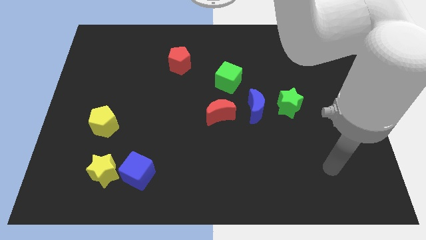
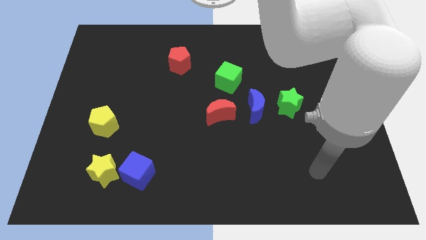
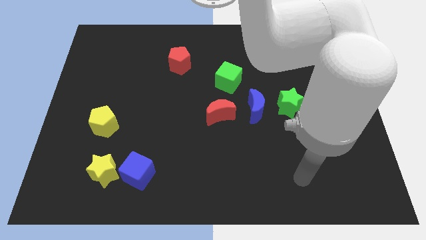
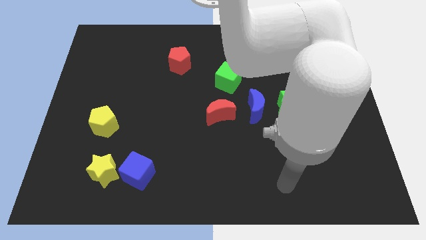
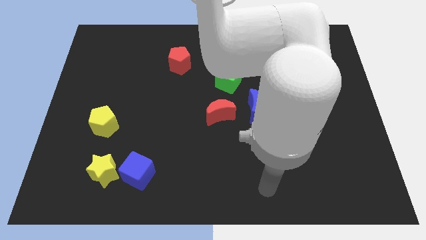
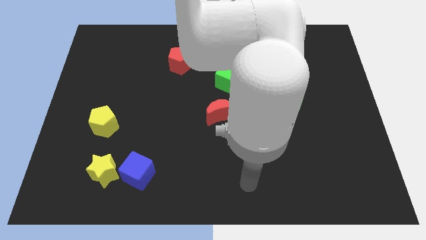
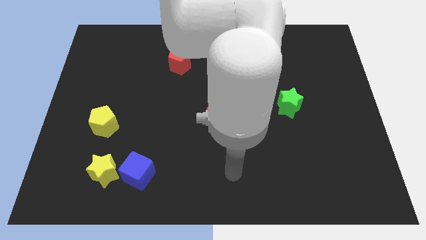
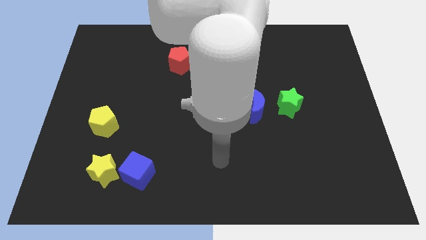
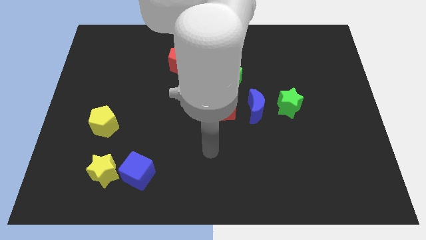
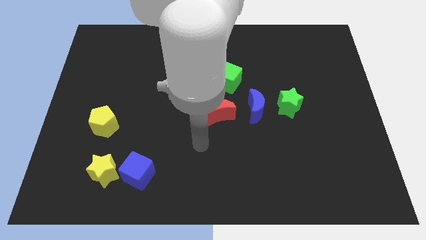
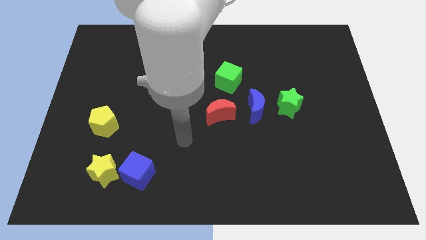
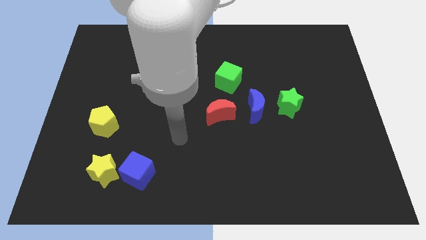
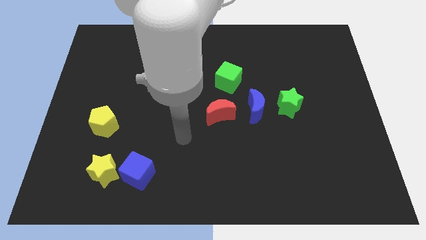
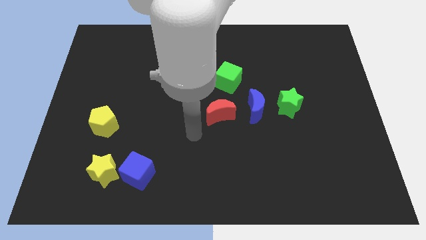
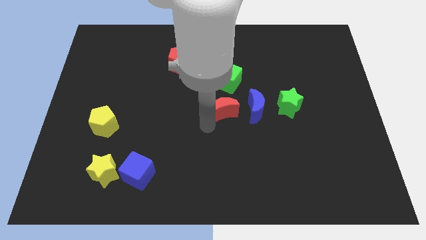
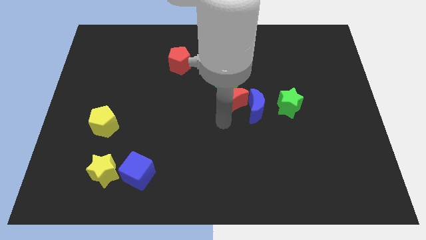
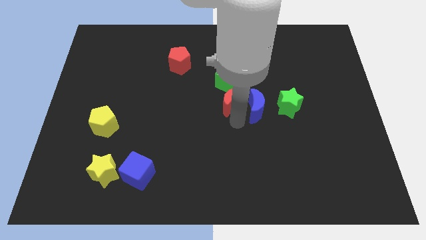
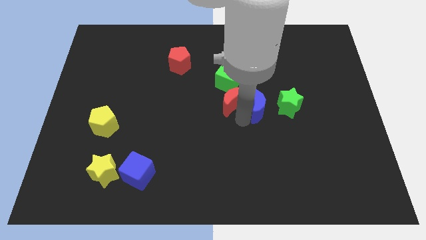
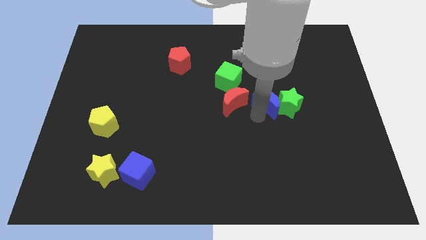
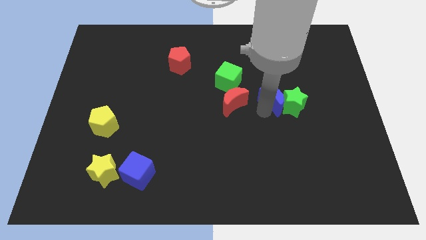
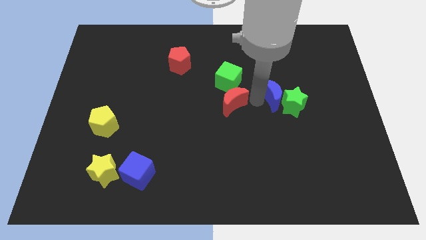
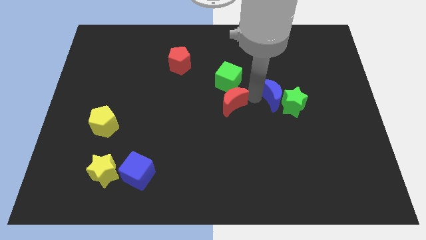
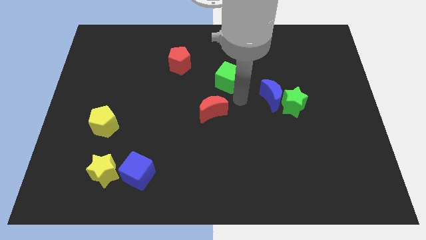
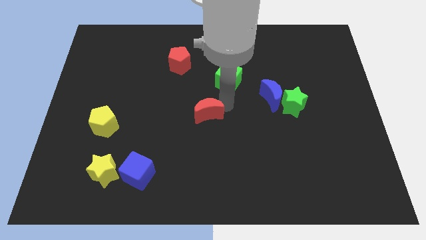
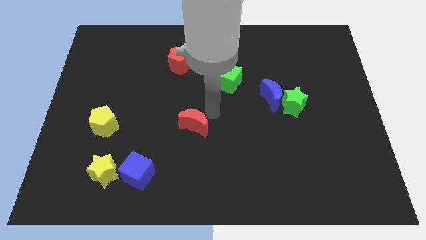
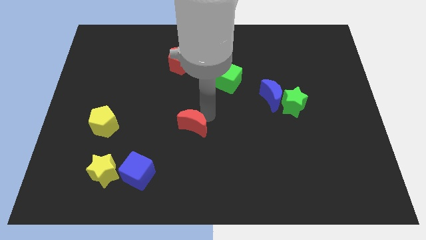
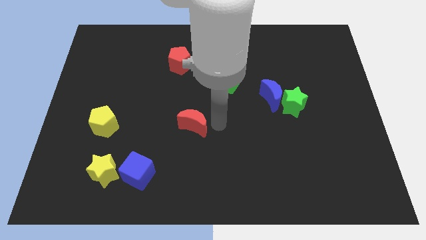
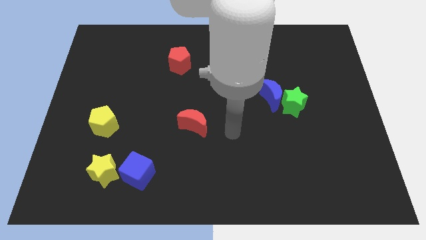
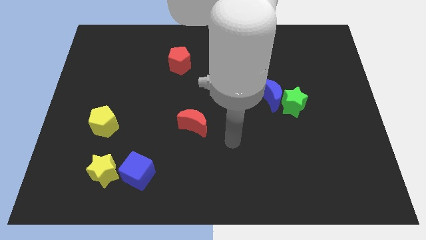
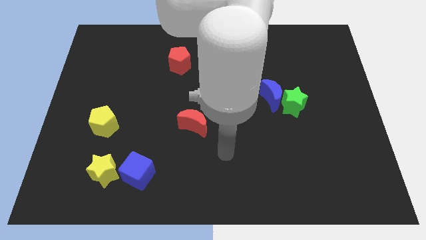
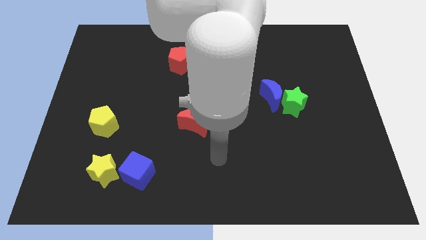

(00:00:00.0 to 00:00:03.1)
move the red moon diagonally to the blue cube

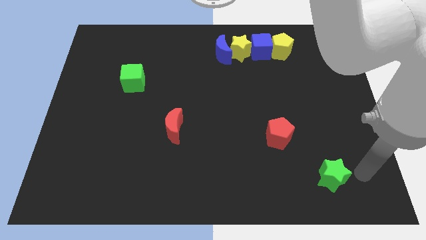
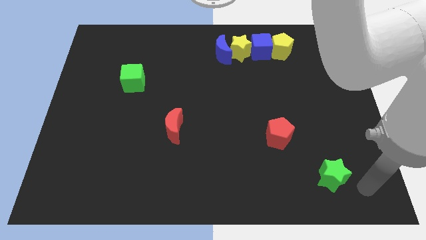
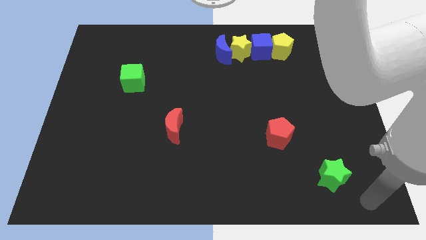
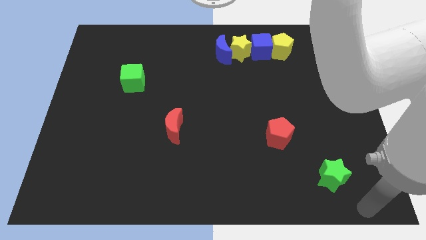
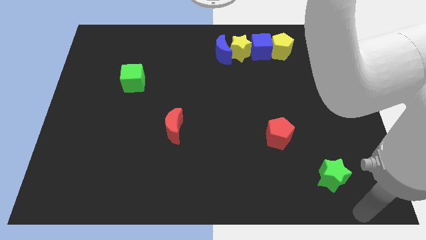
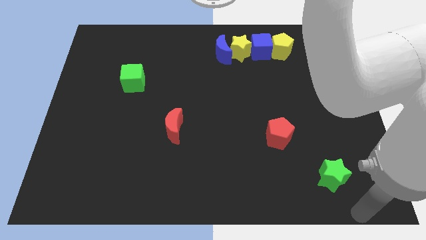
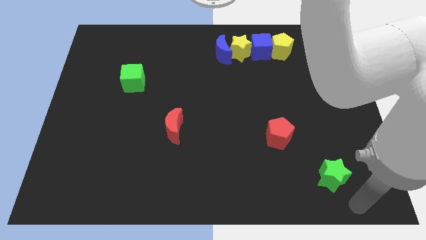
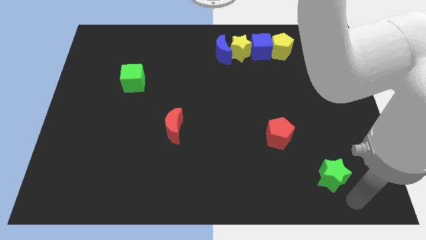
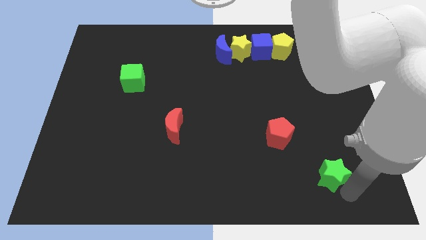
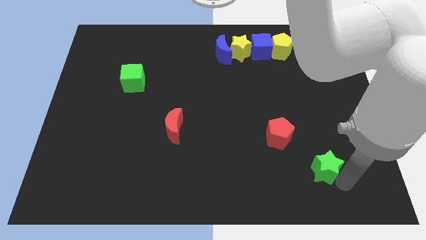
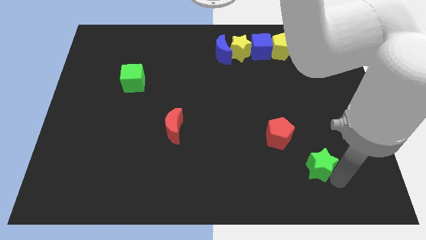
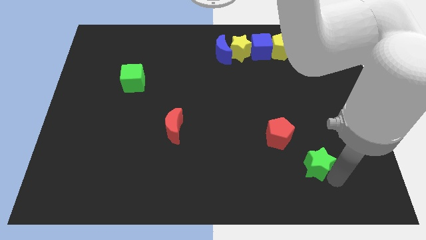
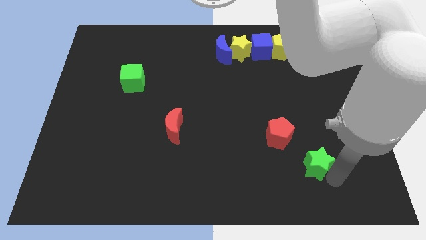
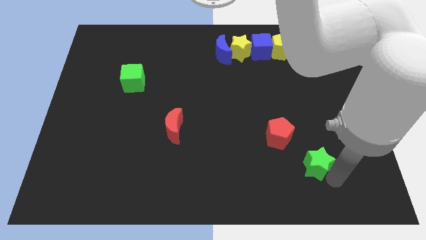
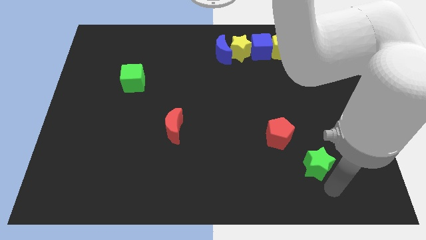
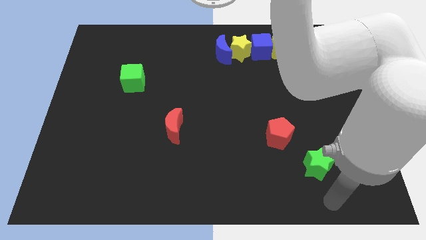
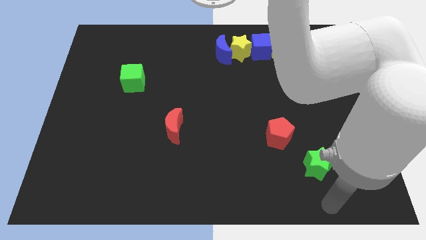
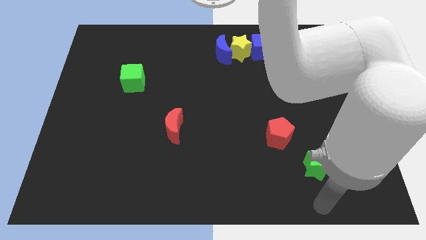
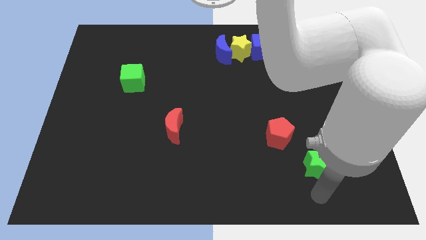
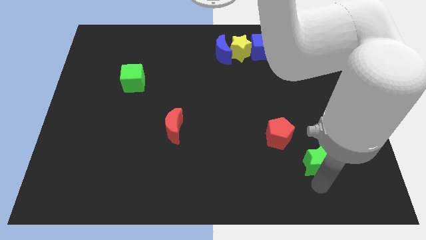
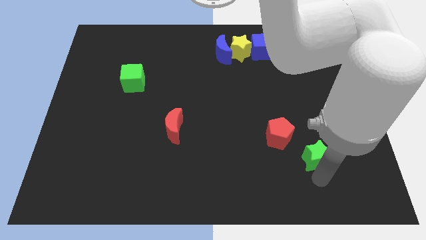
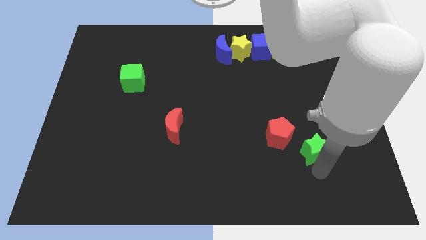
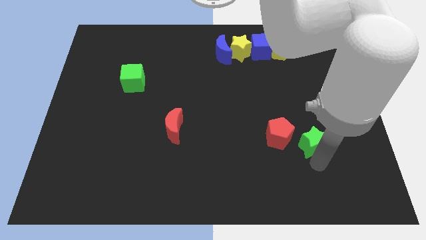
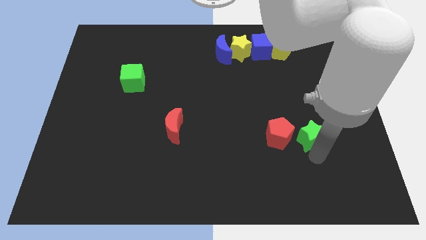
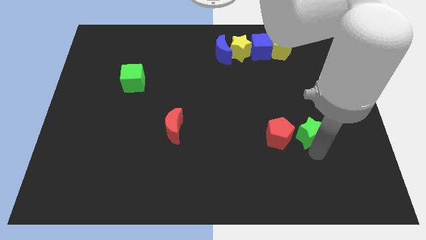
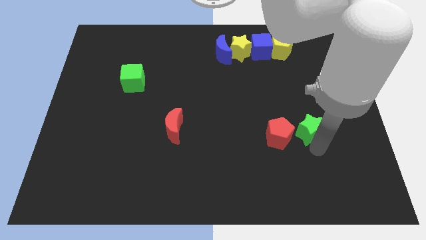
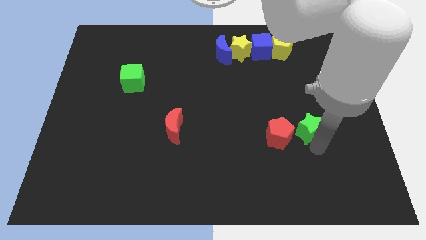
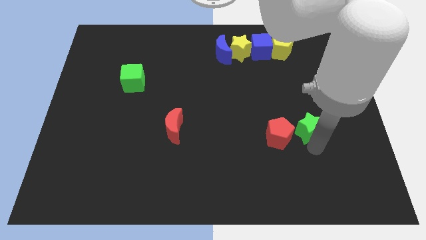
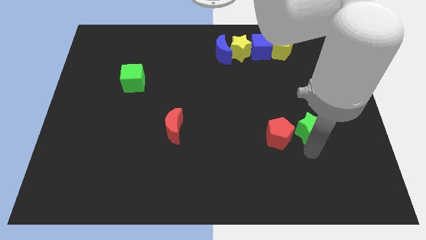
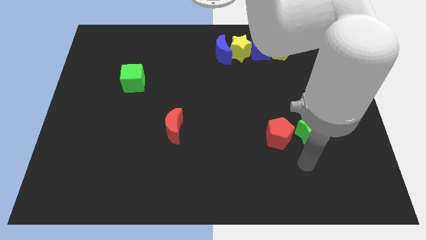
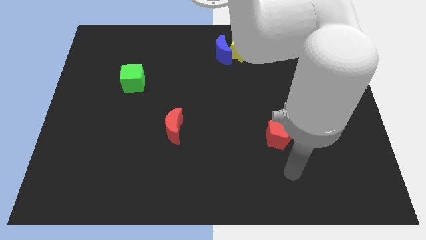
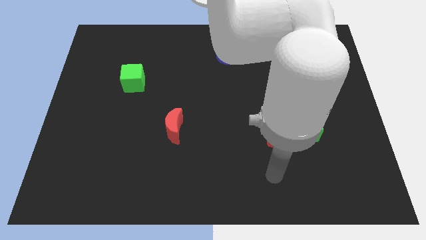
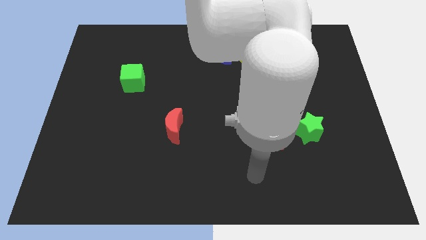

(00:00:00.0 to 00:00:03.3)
reposition the green star right to the red pentagon

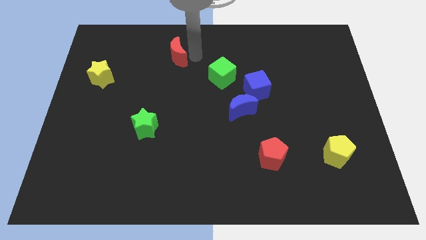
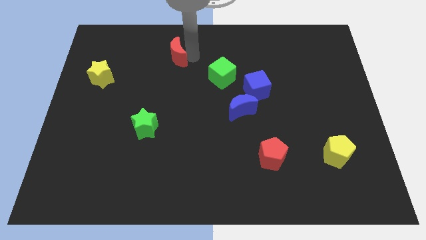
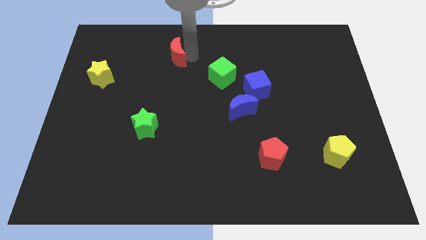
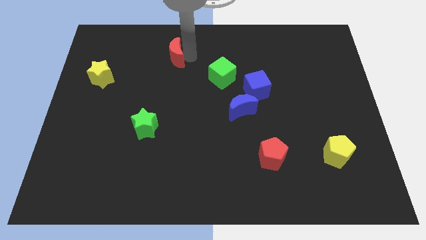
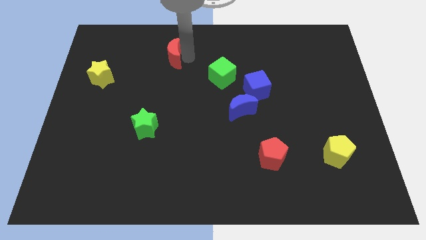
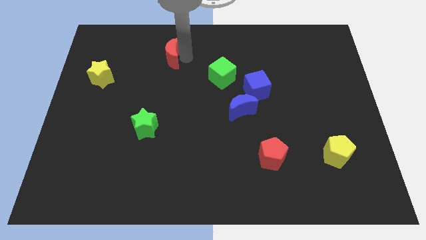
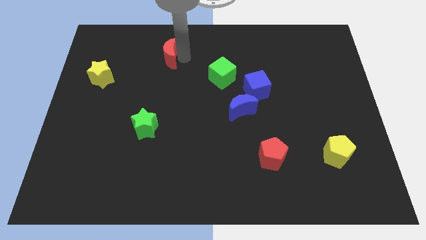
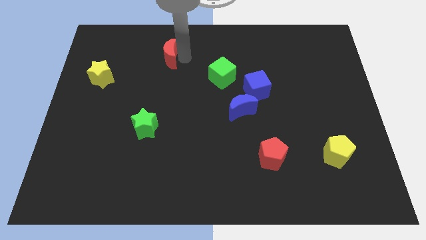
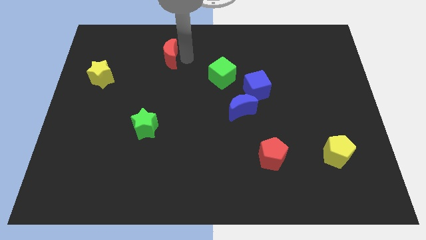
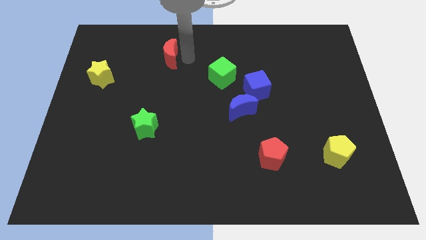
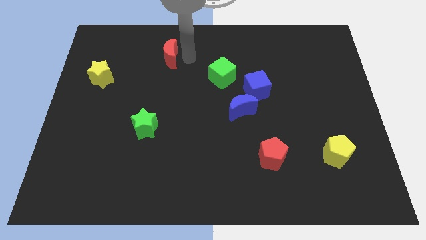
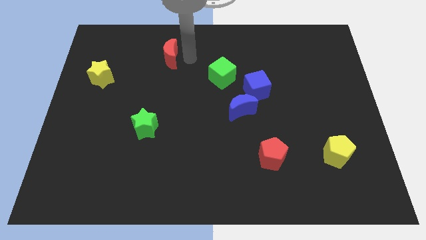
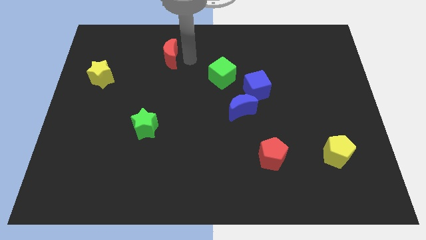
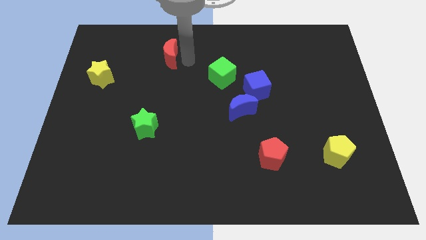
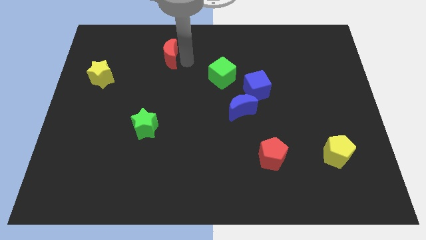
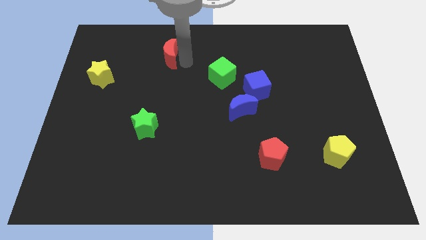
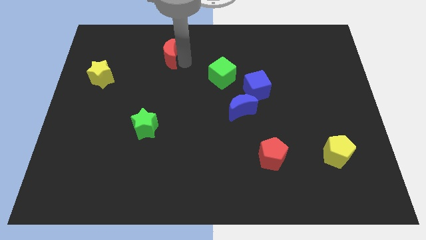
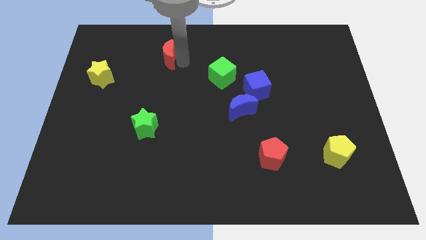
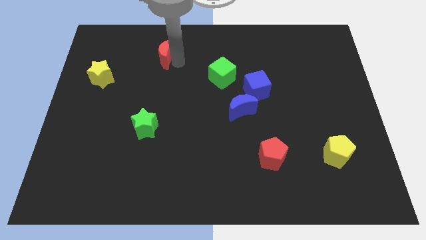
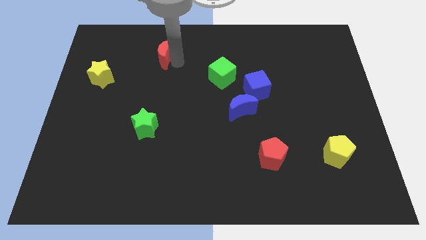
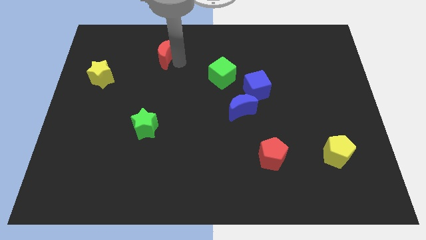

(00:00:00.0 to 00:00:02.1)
place red moon above the green star

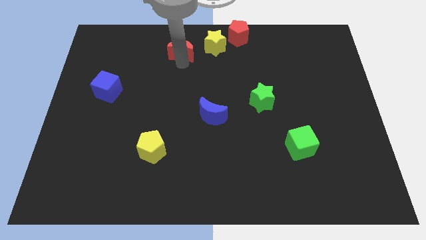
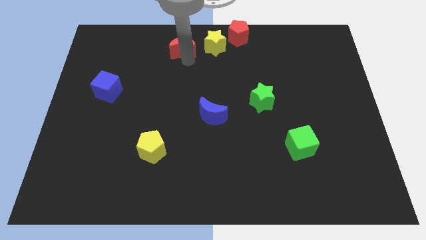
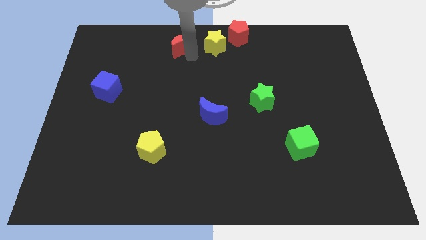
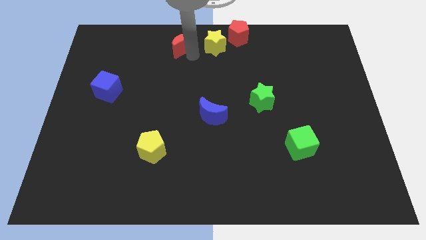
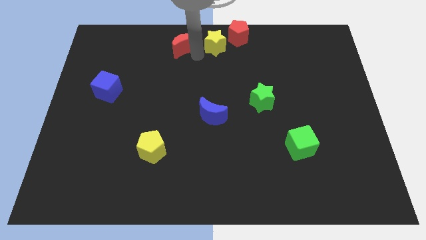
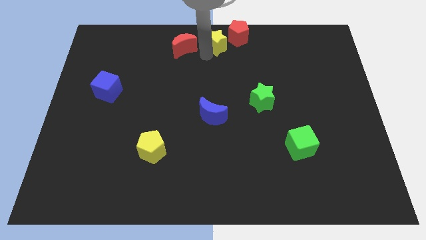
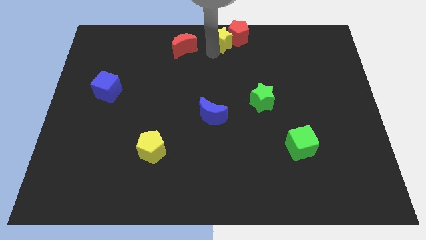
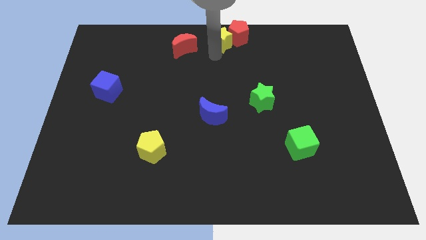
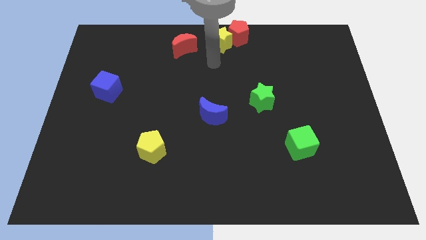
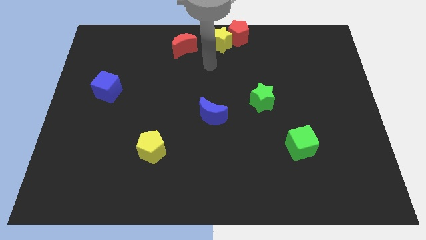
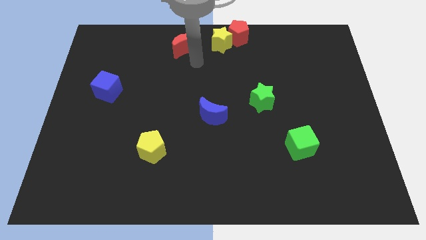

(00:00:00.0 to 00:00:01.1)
push the yellow star into the red pentagon
